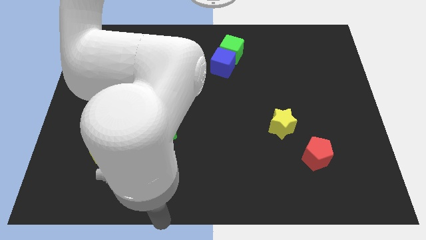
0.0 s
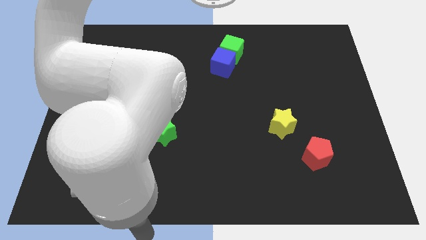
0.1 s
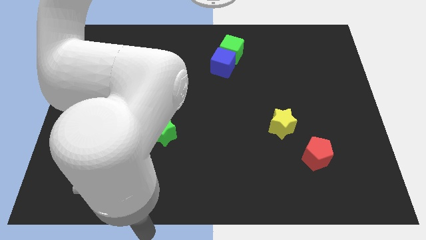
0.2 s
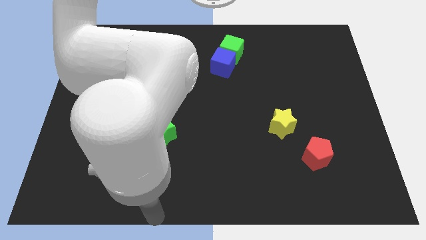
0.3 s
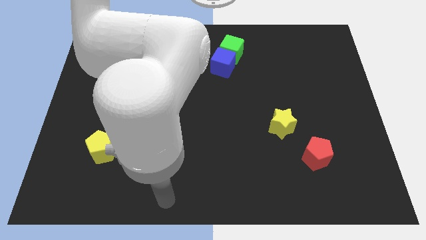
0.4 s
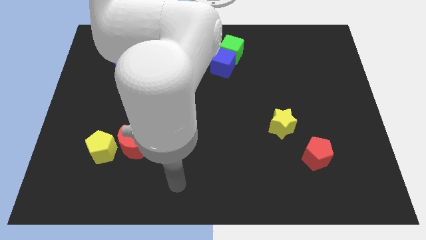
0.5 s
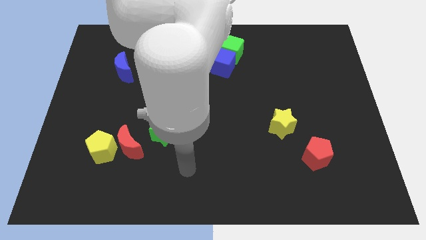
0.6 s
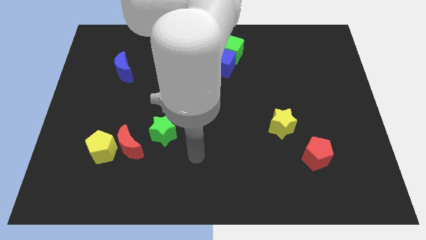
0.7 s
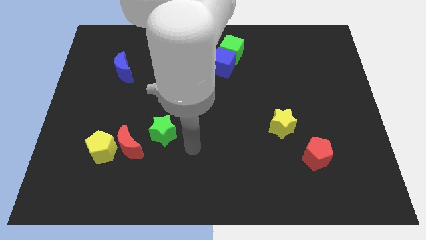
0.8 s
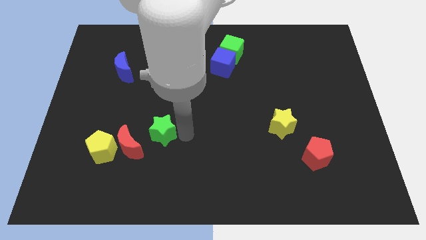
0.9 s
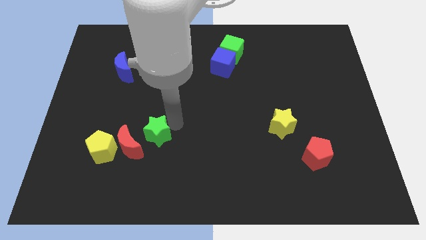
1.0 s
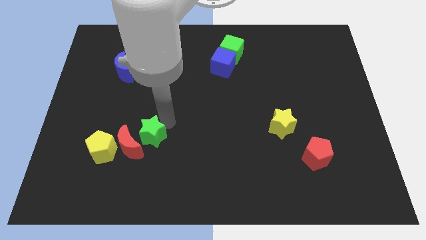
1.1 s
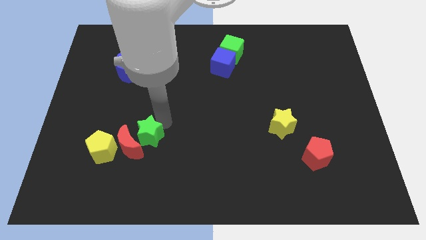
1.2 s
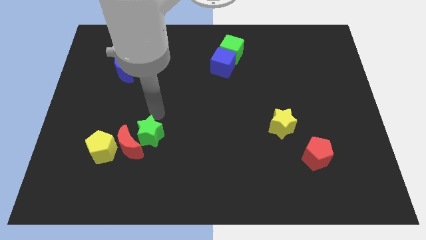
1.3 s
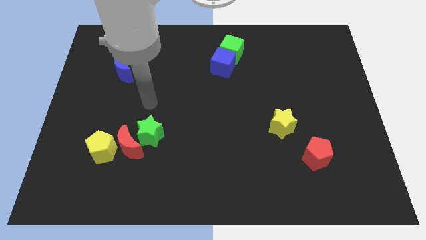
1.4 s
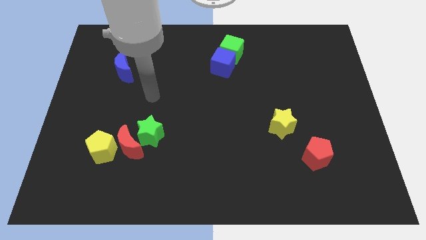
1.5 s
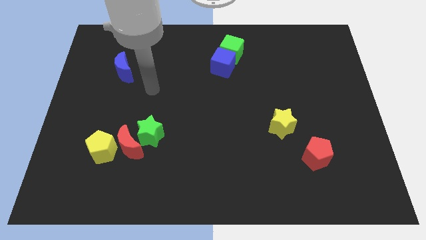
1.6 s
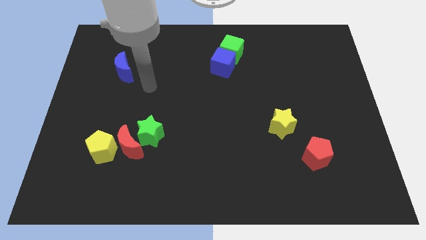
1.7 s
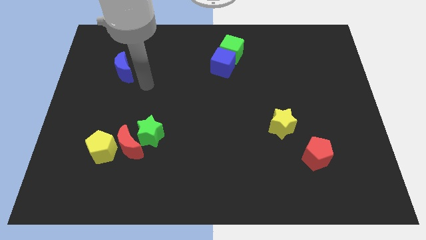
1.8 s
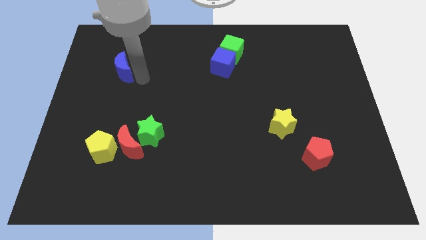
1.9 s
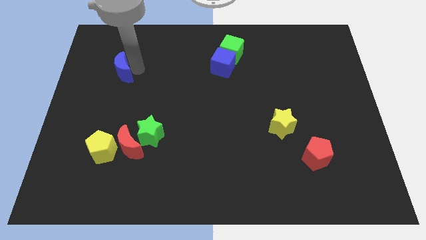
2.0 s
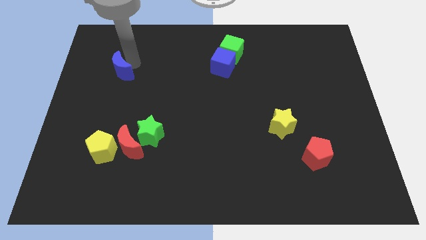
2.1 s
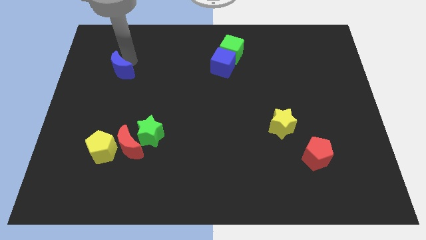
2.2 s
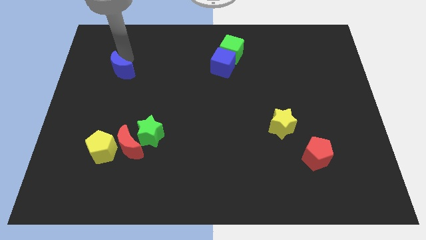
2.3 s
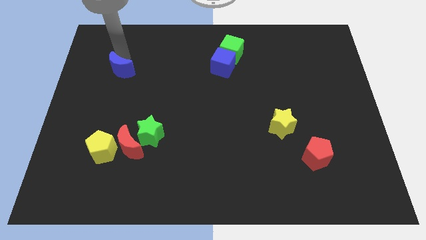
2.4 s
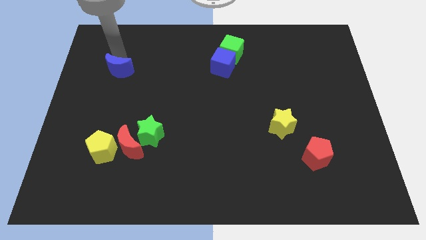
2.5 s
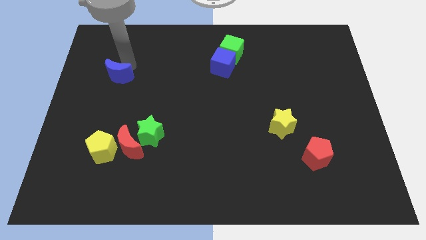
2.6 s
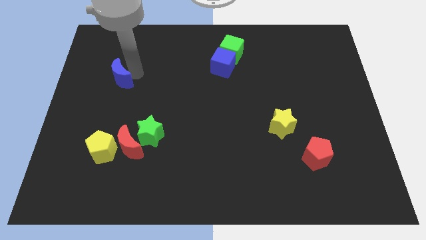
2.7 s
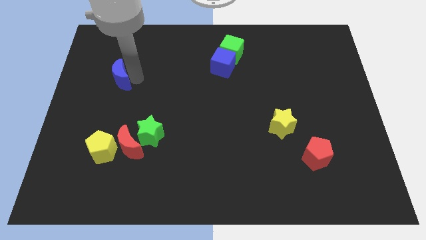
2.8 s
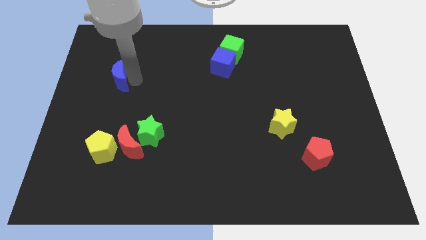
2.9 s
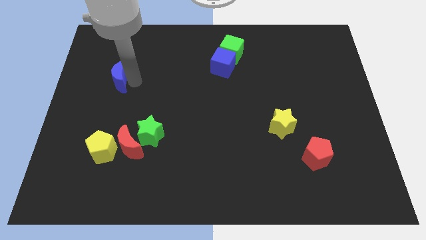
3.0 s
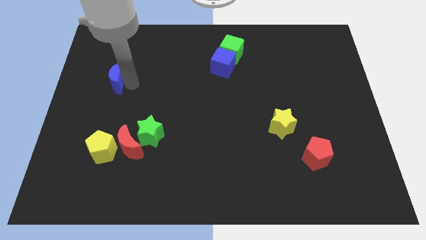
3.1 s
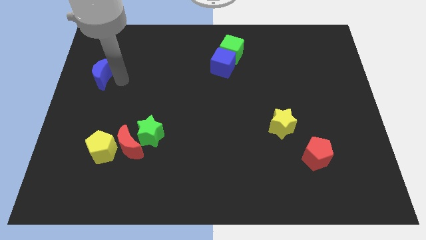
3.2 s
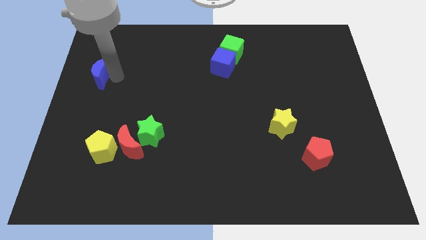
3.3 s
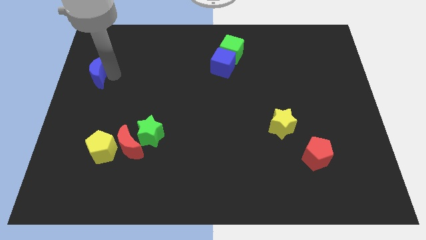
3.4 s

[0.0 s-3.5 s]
move the blue crescent to the left

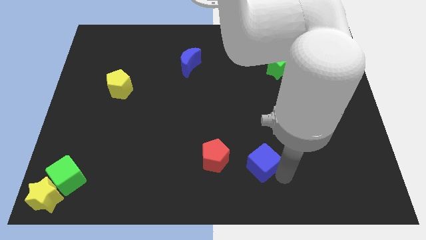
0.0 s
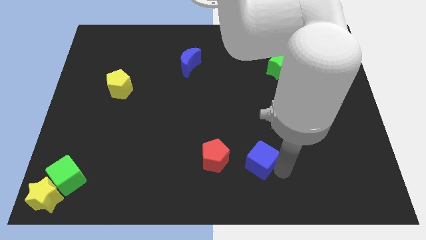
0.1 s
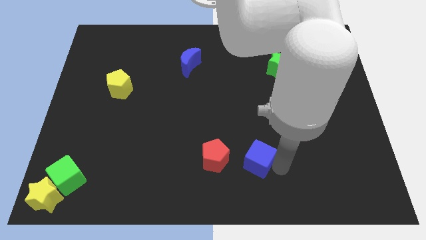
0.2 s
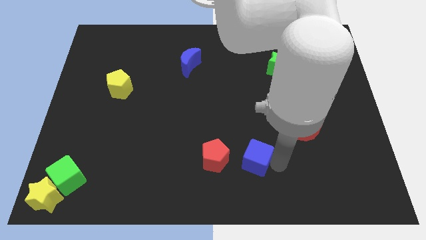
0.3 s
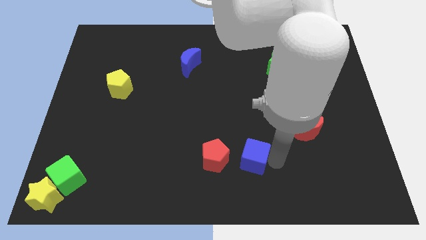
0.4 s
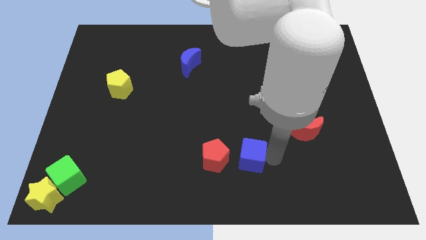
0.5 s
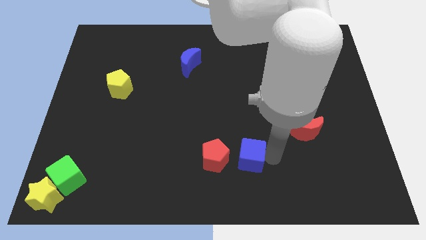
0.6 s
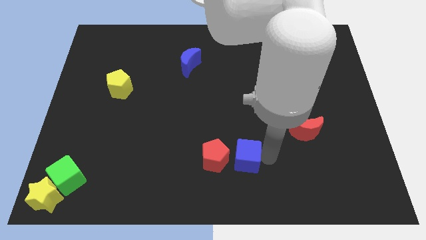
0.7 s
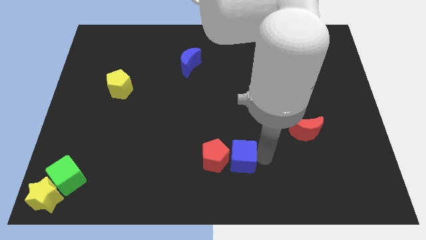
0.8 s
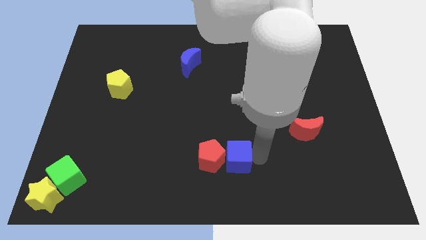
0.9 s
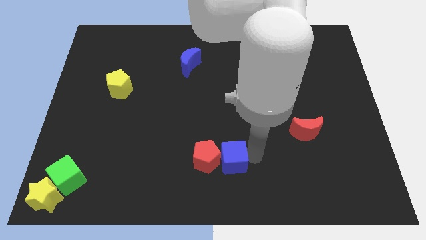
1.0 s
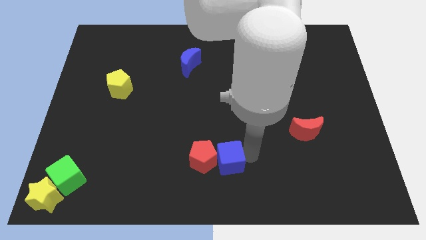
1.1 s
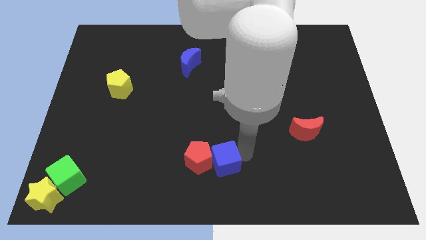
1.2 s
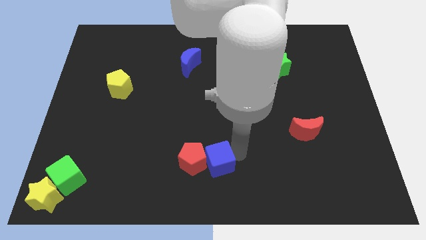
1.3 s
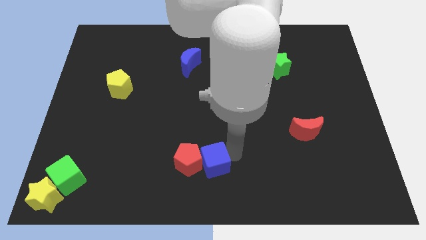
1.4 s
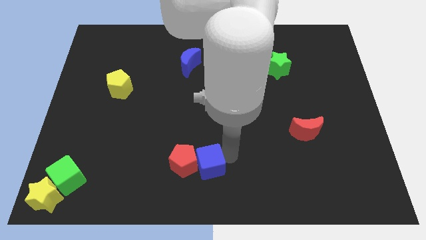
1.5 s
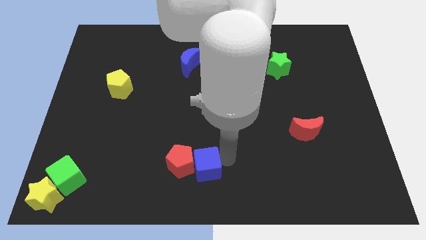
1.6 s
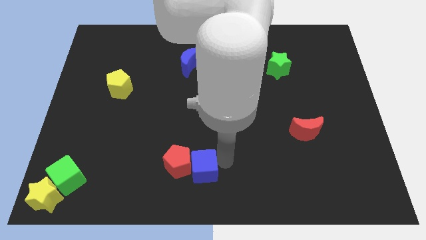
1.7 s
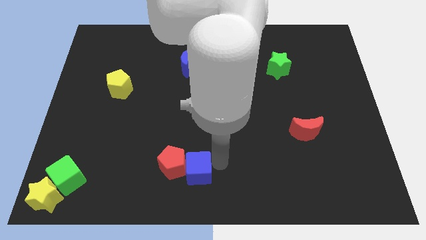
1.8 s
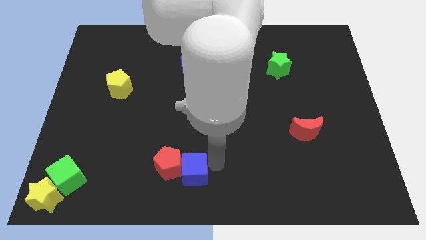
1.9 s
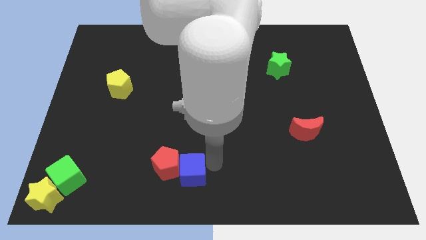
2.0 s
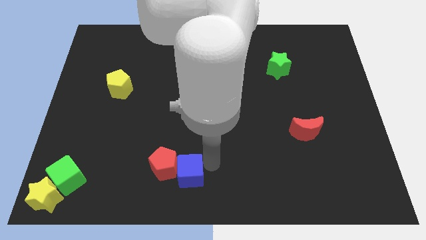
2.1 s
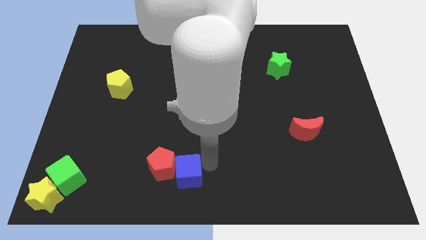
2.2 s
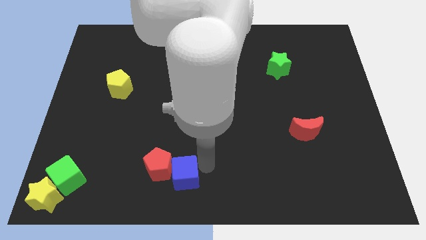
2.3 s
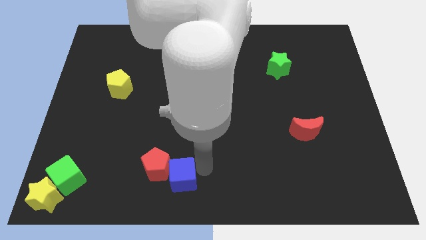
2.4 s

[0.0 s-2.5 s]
push the blue cube into the red pentagon

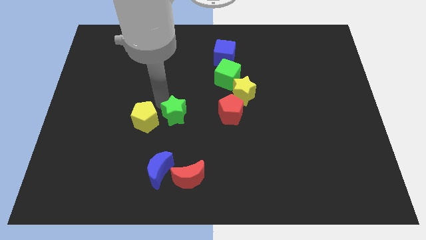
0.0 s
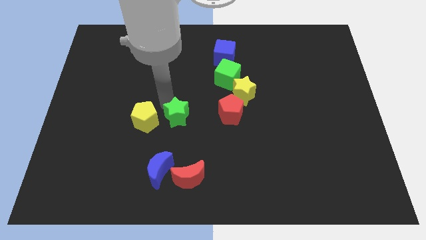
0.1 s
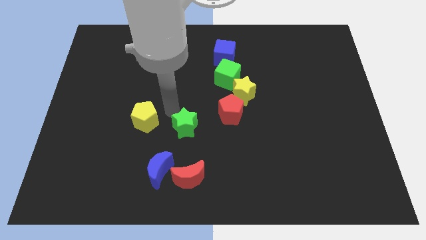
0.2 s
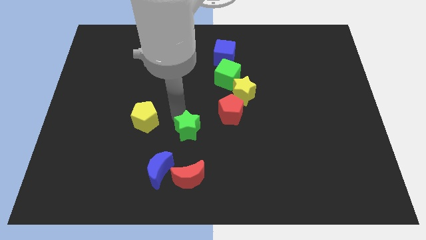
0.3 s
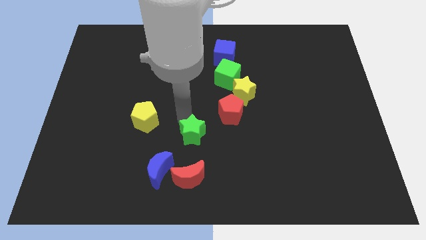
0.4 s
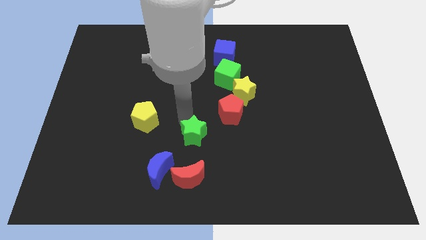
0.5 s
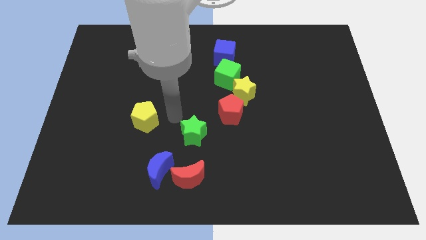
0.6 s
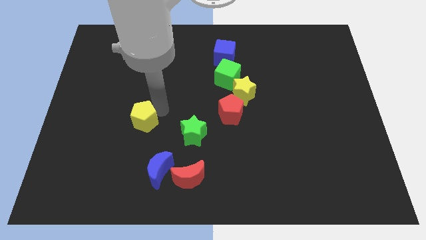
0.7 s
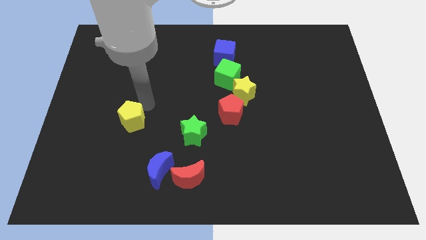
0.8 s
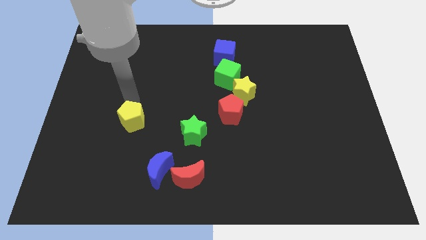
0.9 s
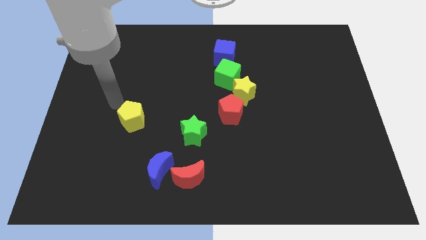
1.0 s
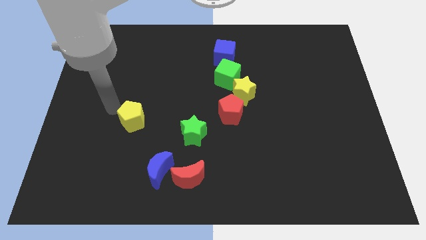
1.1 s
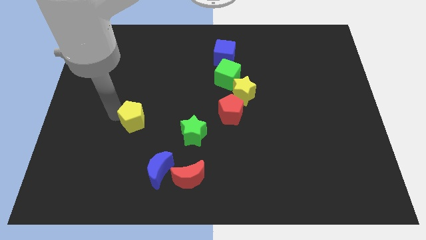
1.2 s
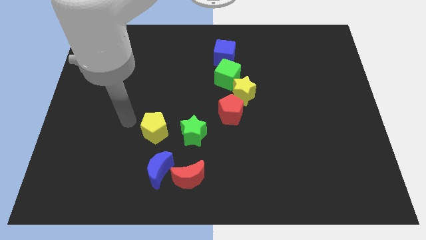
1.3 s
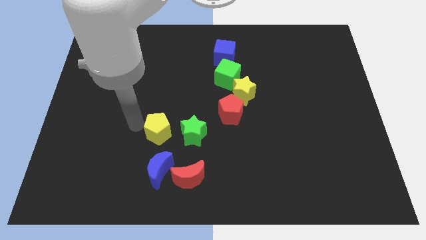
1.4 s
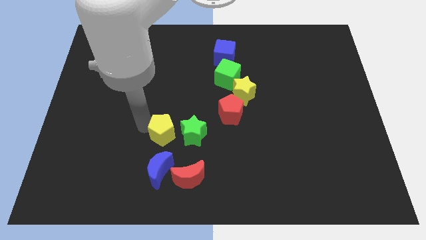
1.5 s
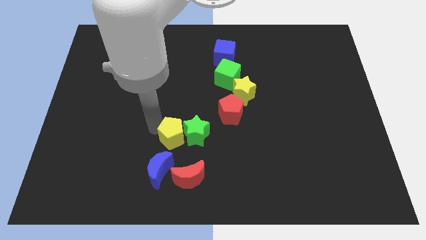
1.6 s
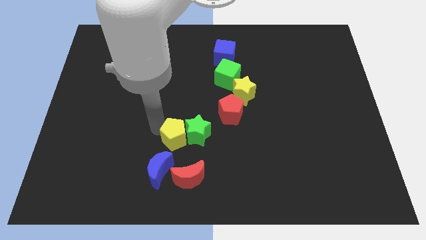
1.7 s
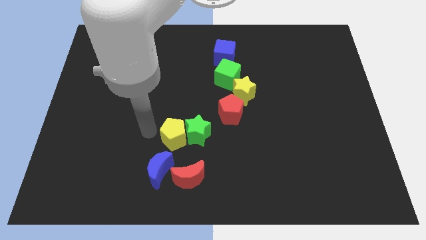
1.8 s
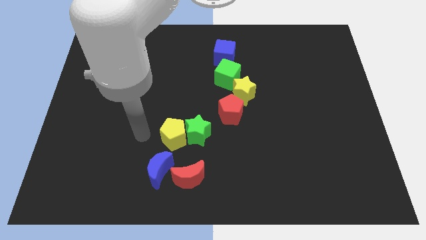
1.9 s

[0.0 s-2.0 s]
put the yellow pentagon to the left side of the green star

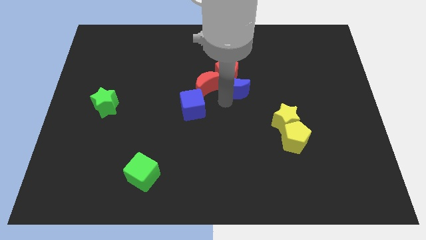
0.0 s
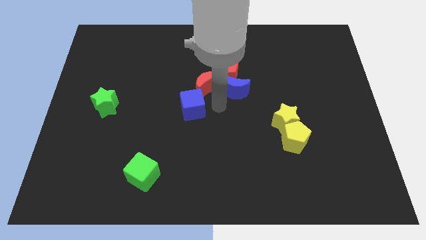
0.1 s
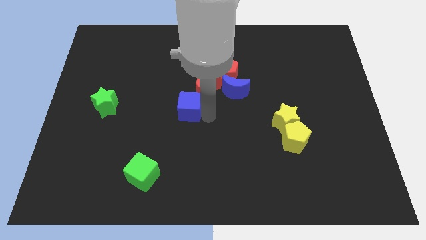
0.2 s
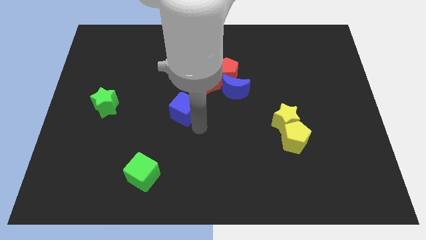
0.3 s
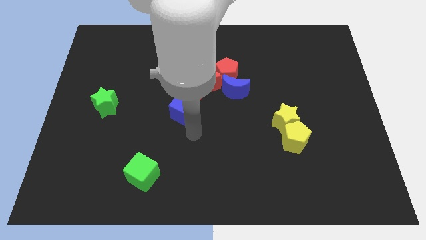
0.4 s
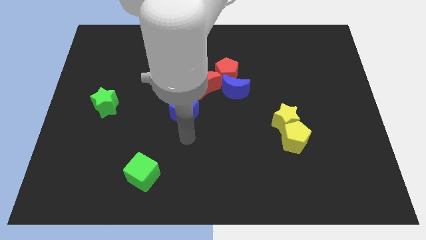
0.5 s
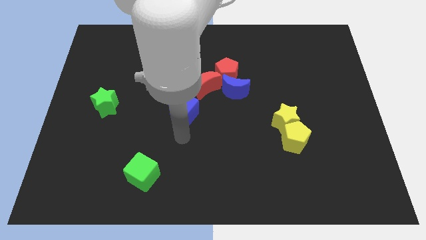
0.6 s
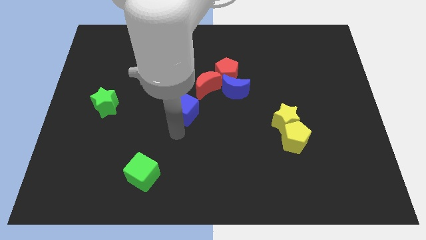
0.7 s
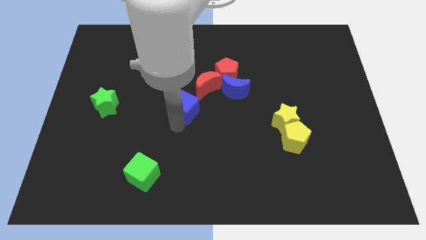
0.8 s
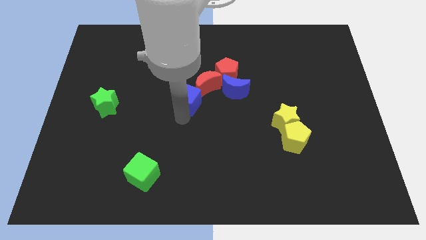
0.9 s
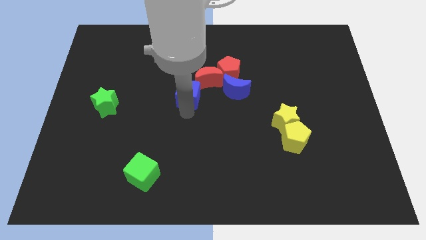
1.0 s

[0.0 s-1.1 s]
move the blue cube slightly top

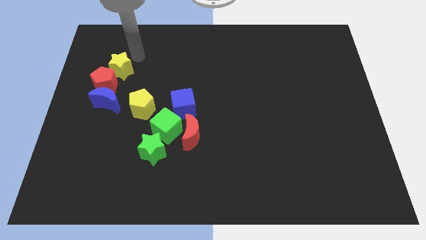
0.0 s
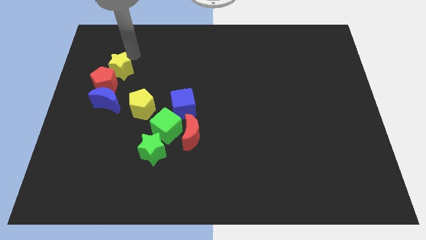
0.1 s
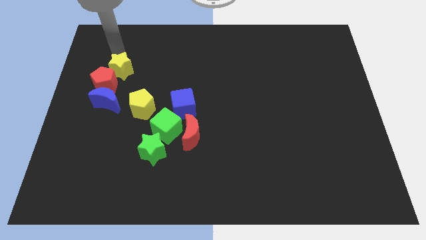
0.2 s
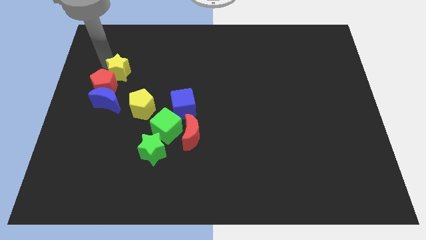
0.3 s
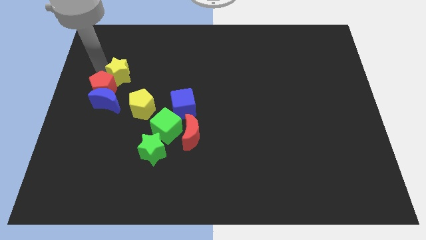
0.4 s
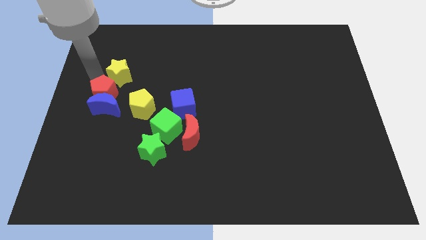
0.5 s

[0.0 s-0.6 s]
slightly push the yellow star red pentagon and blue crescent towards the bottom left corner
